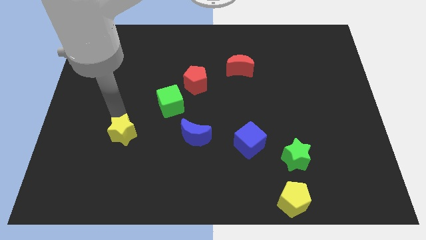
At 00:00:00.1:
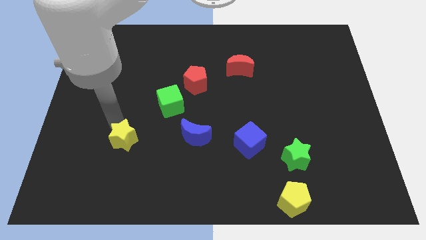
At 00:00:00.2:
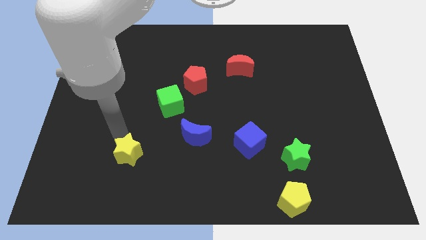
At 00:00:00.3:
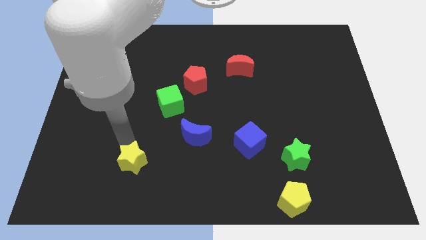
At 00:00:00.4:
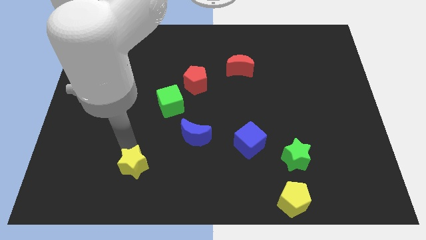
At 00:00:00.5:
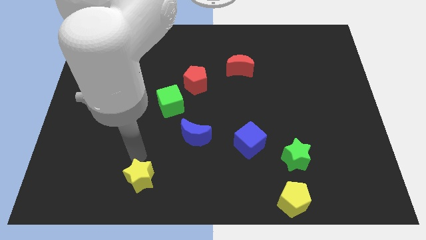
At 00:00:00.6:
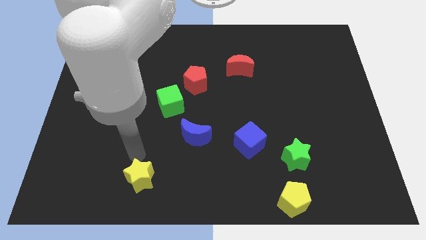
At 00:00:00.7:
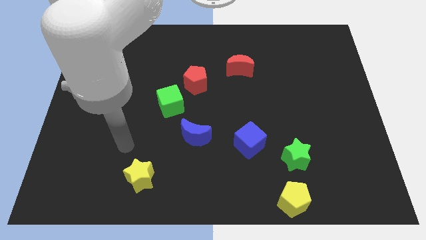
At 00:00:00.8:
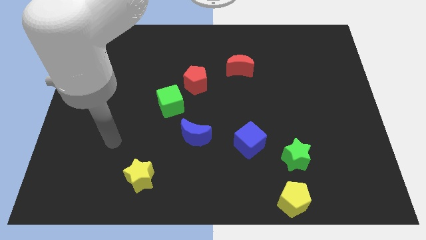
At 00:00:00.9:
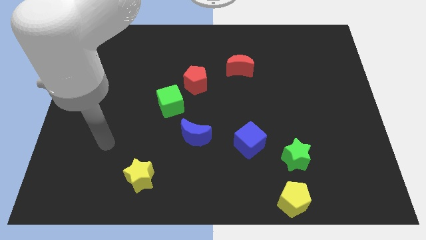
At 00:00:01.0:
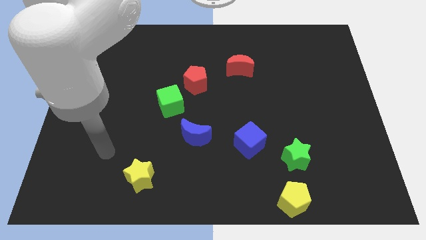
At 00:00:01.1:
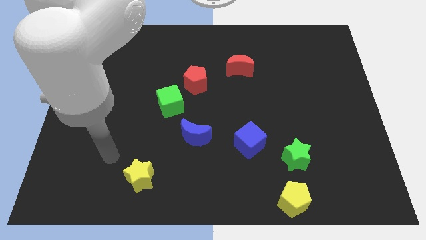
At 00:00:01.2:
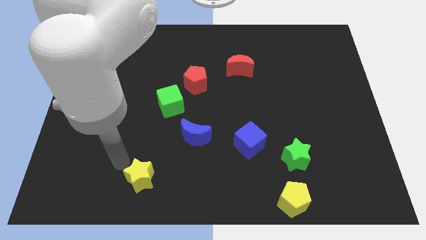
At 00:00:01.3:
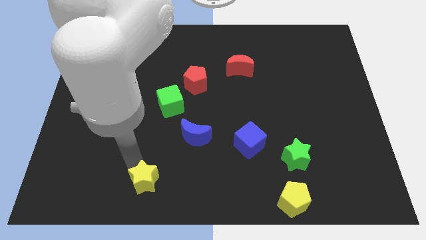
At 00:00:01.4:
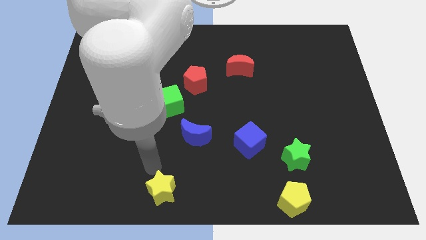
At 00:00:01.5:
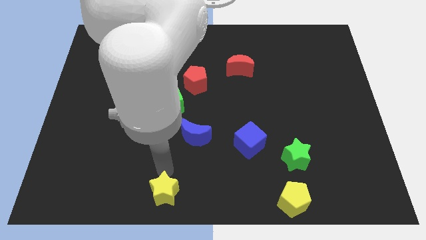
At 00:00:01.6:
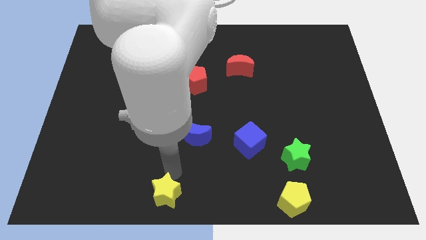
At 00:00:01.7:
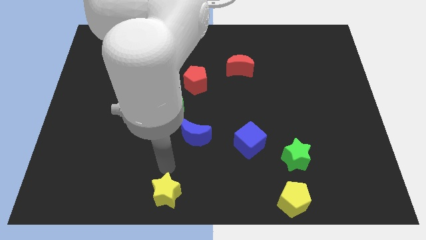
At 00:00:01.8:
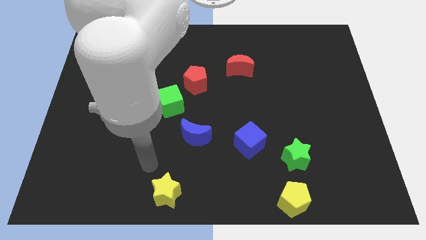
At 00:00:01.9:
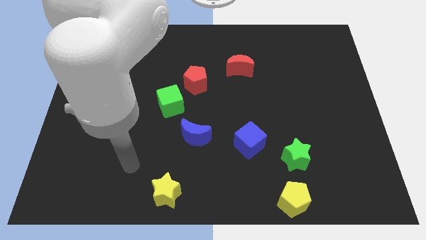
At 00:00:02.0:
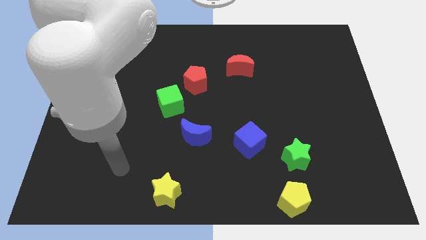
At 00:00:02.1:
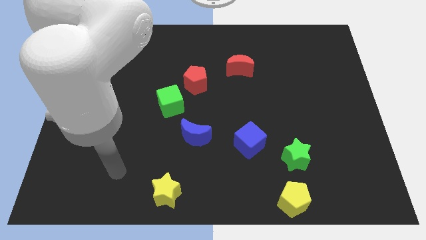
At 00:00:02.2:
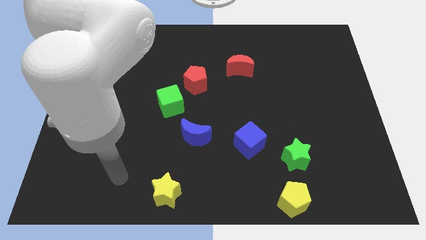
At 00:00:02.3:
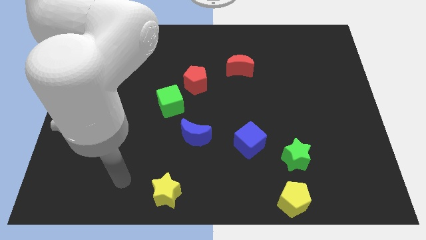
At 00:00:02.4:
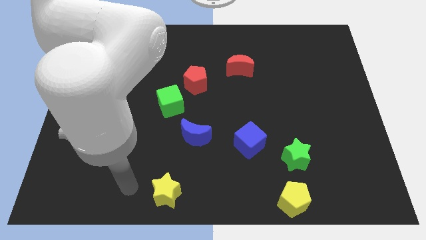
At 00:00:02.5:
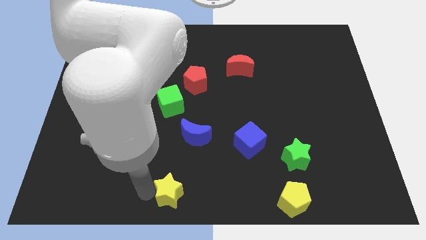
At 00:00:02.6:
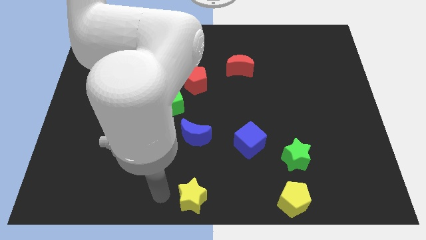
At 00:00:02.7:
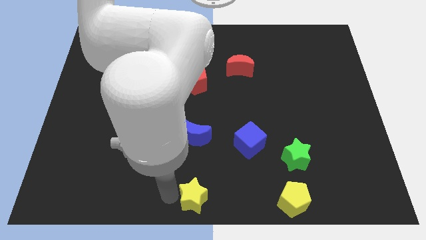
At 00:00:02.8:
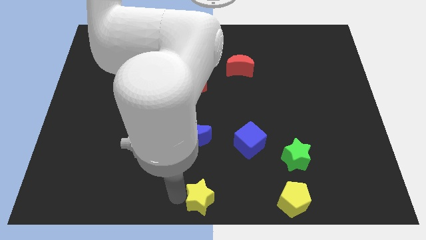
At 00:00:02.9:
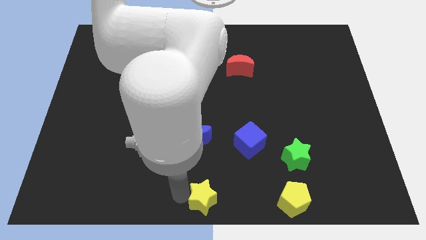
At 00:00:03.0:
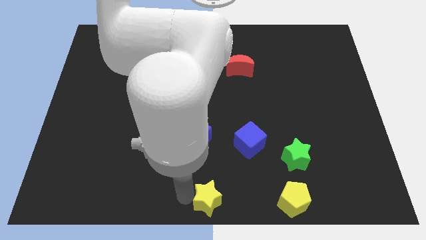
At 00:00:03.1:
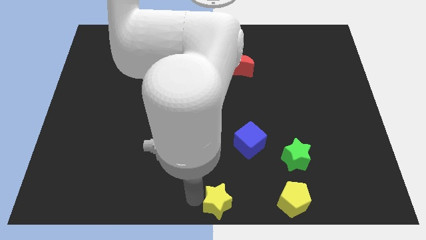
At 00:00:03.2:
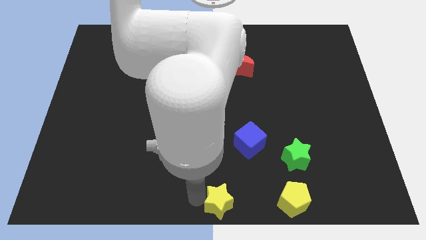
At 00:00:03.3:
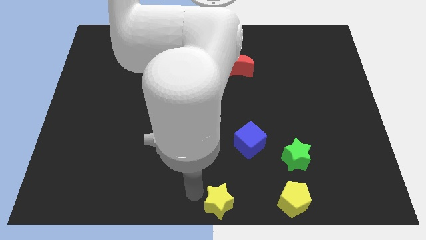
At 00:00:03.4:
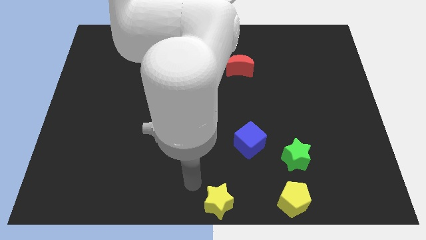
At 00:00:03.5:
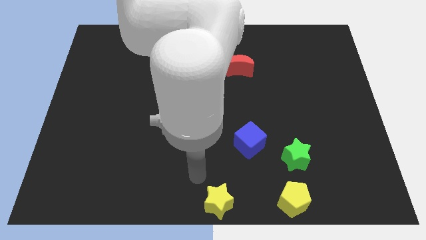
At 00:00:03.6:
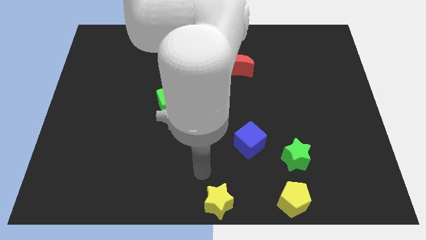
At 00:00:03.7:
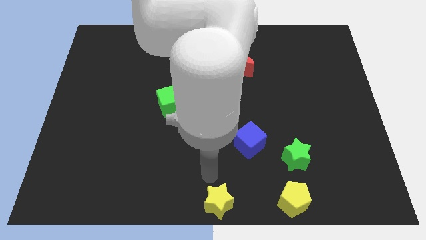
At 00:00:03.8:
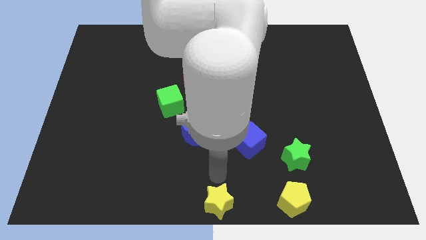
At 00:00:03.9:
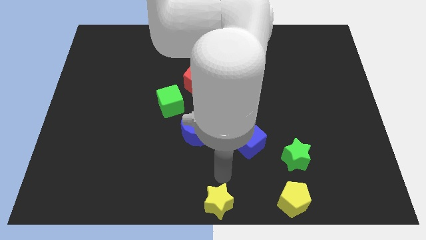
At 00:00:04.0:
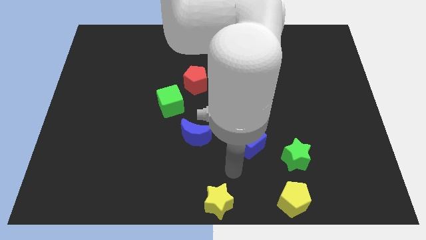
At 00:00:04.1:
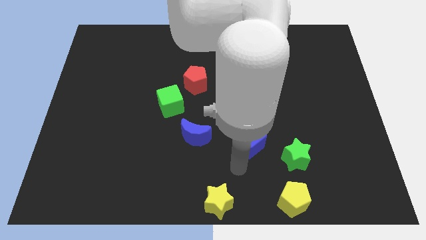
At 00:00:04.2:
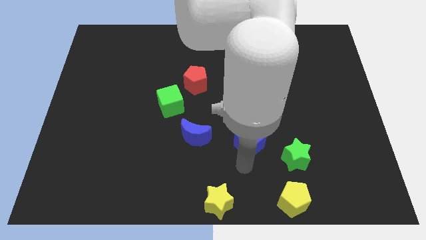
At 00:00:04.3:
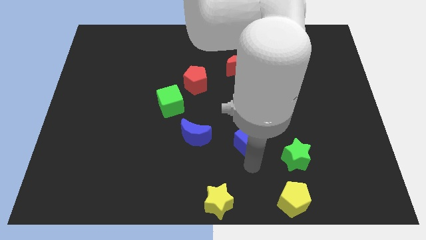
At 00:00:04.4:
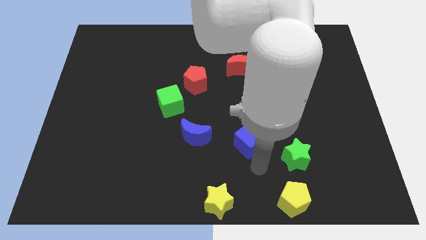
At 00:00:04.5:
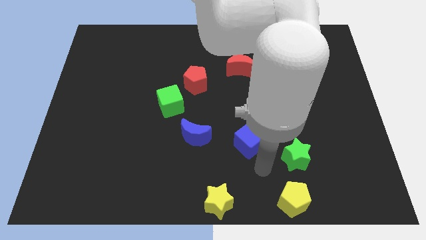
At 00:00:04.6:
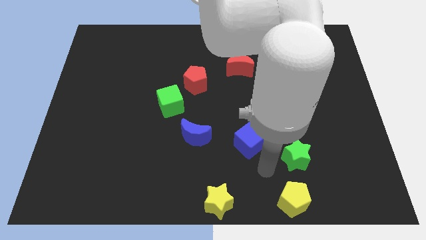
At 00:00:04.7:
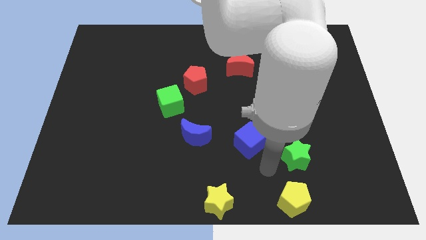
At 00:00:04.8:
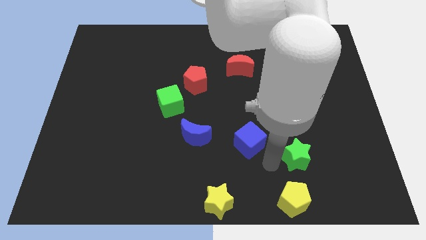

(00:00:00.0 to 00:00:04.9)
place the yellow star at the bottom center of the board

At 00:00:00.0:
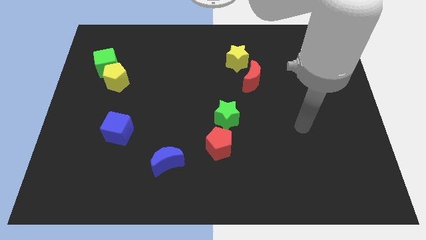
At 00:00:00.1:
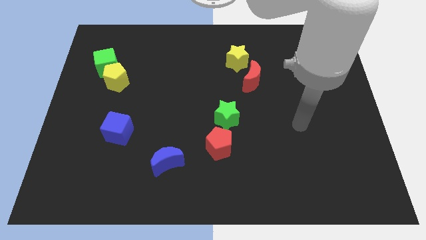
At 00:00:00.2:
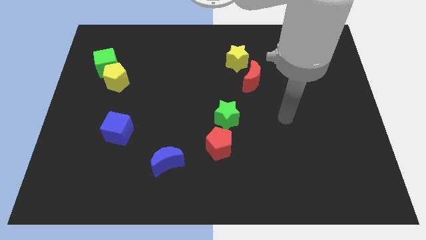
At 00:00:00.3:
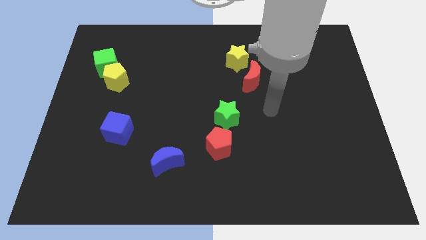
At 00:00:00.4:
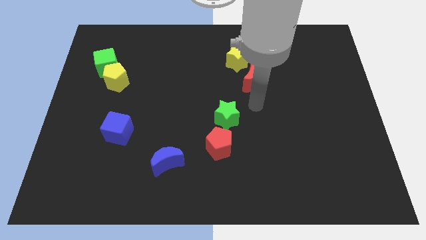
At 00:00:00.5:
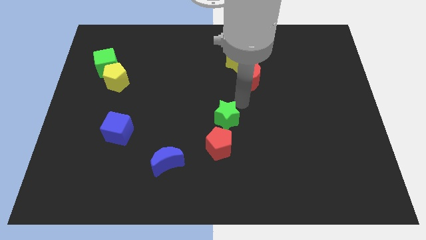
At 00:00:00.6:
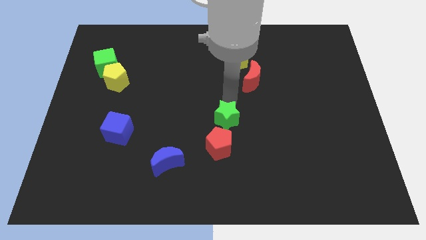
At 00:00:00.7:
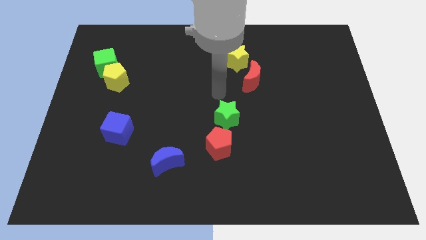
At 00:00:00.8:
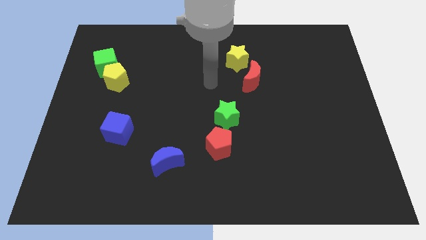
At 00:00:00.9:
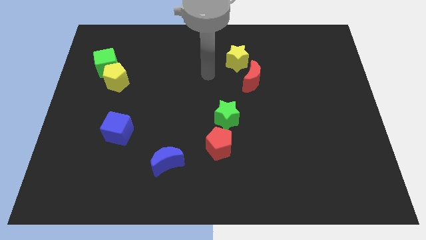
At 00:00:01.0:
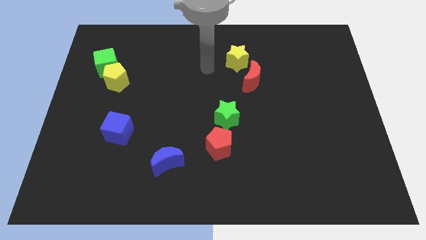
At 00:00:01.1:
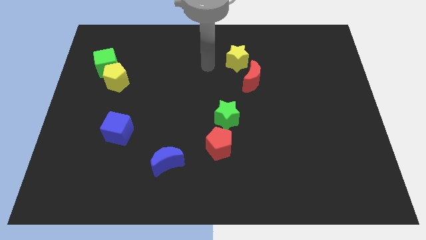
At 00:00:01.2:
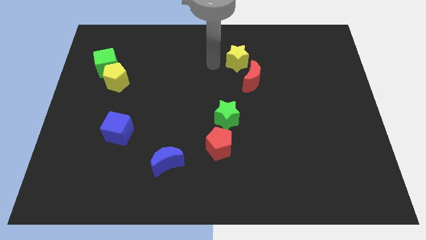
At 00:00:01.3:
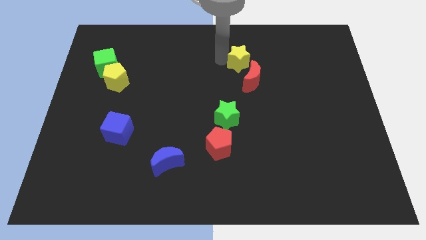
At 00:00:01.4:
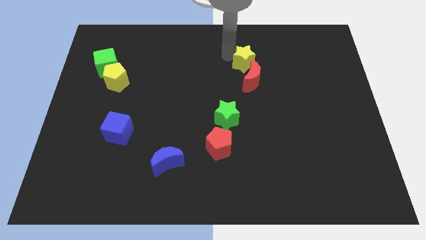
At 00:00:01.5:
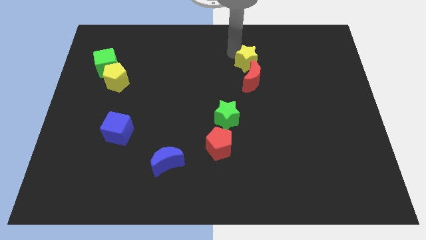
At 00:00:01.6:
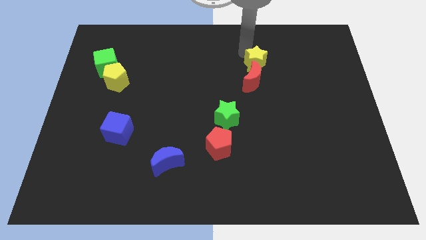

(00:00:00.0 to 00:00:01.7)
move the yellow star into the red moon

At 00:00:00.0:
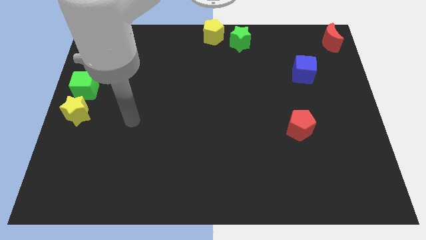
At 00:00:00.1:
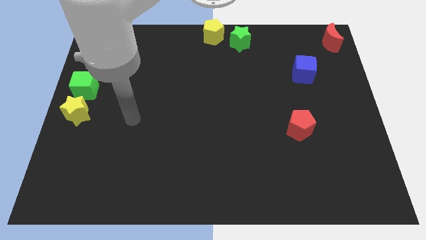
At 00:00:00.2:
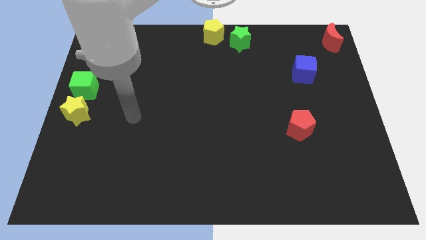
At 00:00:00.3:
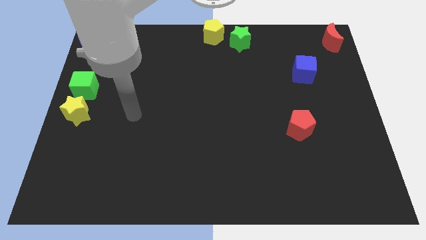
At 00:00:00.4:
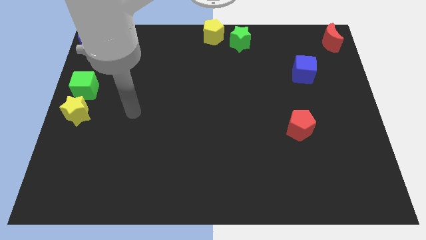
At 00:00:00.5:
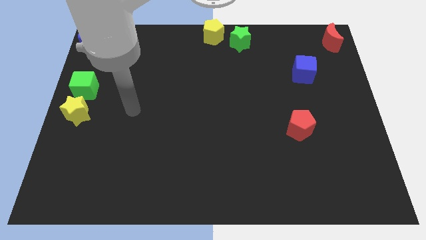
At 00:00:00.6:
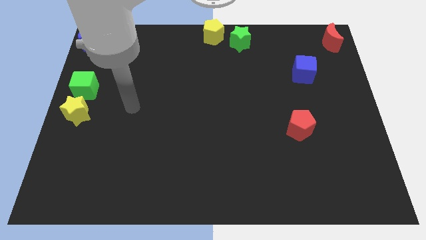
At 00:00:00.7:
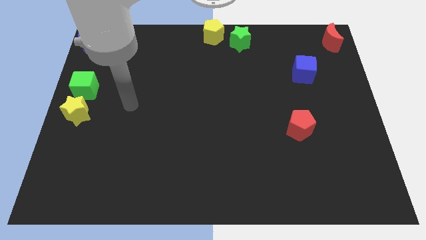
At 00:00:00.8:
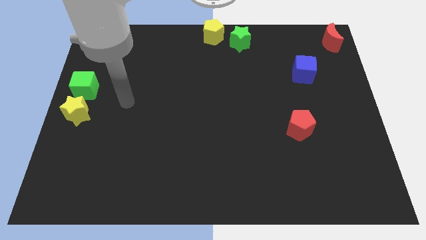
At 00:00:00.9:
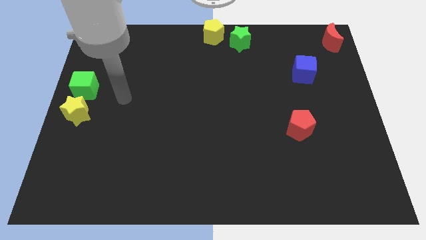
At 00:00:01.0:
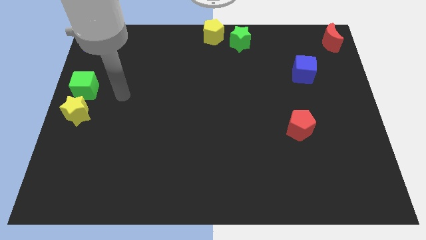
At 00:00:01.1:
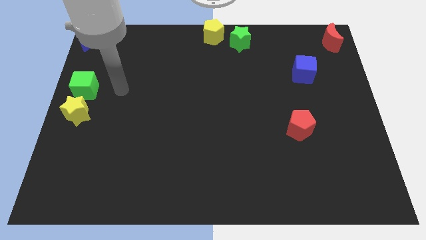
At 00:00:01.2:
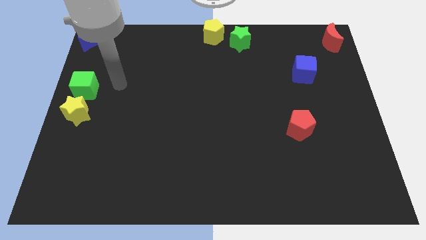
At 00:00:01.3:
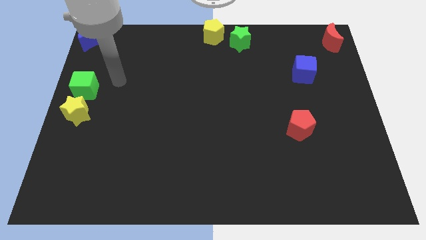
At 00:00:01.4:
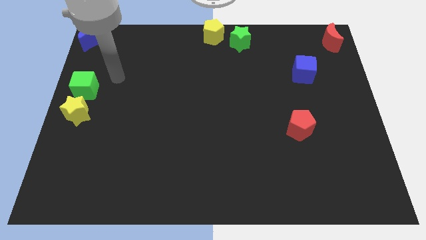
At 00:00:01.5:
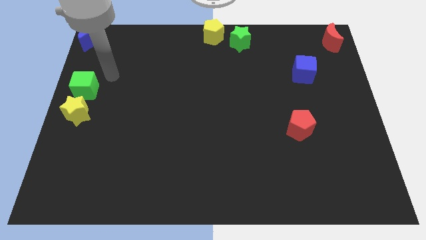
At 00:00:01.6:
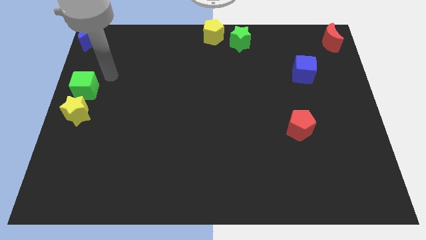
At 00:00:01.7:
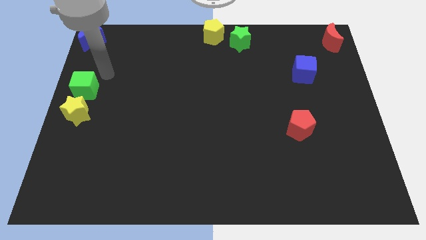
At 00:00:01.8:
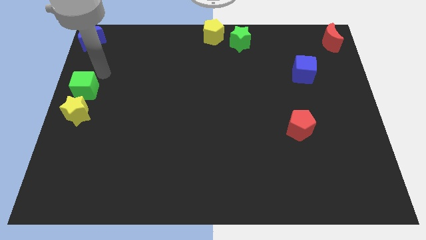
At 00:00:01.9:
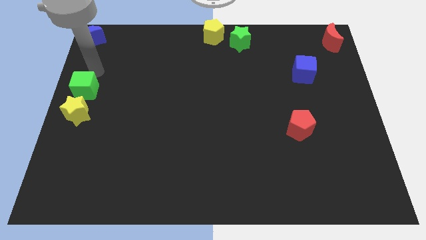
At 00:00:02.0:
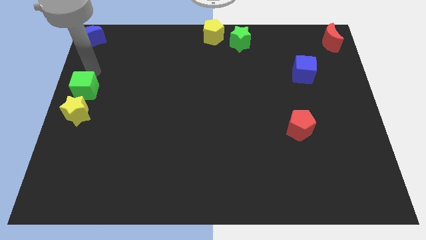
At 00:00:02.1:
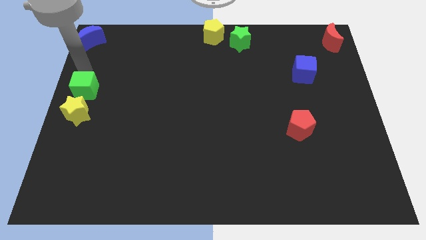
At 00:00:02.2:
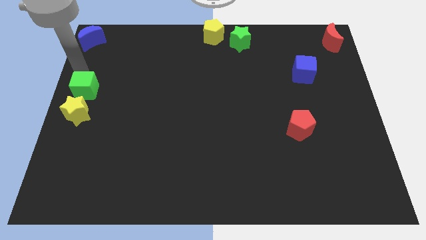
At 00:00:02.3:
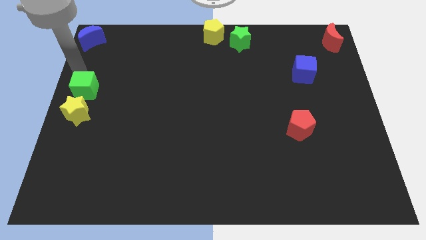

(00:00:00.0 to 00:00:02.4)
point your arm above the green cube
